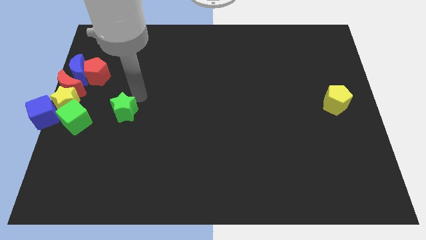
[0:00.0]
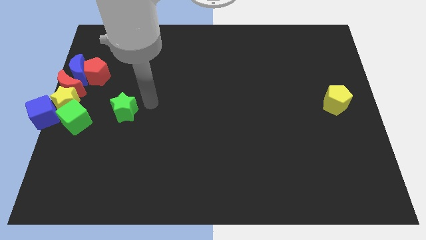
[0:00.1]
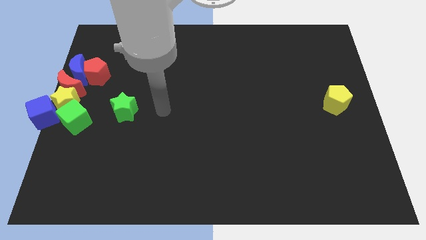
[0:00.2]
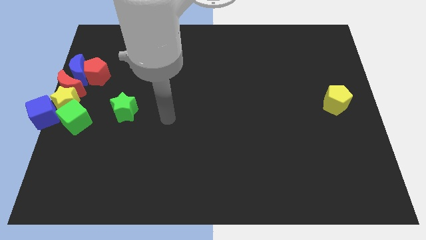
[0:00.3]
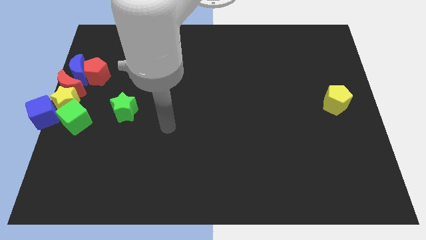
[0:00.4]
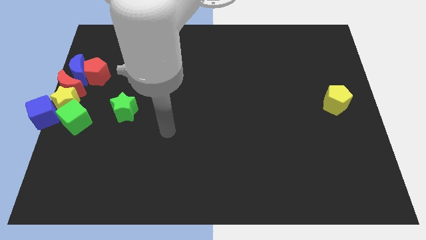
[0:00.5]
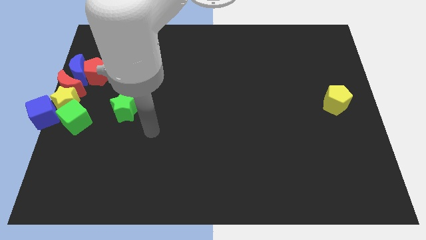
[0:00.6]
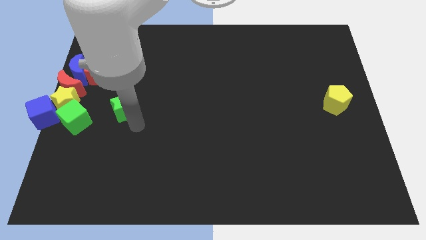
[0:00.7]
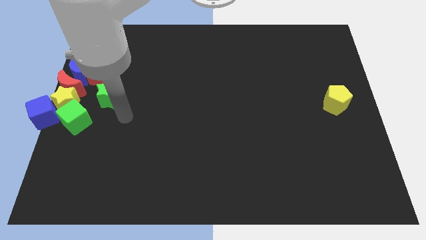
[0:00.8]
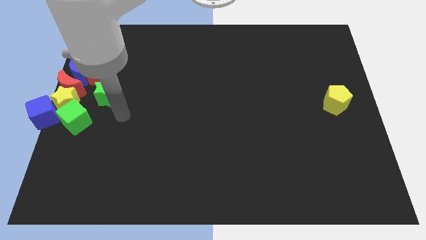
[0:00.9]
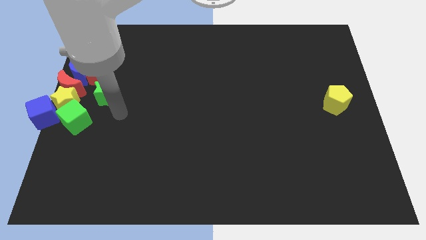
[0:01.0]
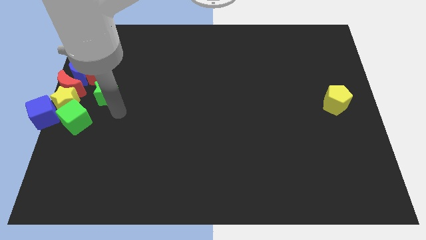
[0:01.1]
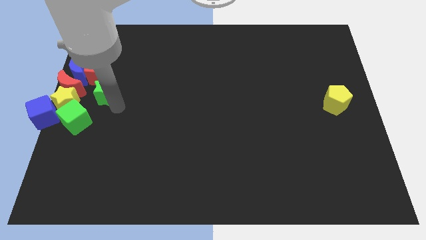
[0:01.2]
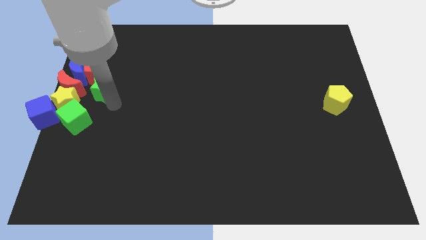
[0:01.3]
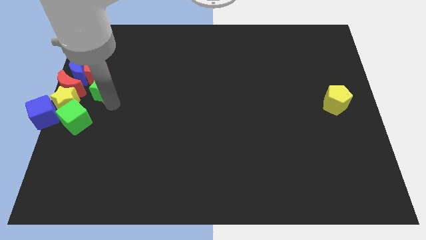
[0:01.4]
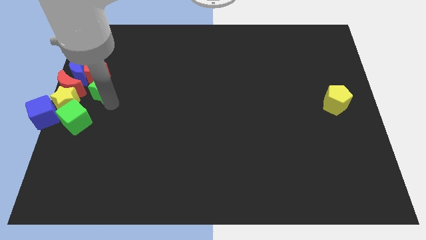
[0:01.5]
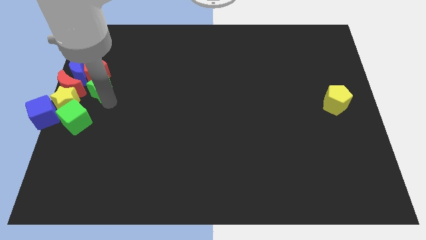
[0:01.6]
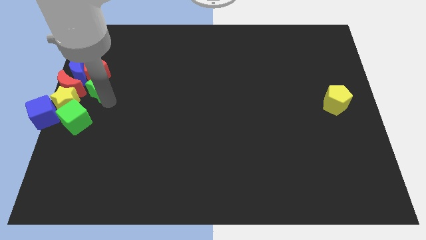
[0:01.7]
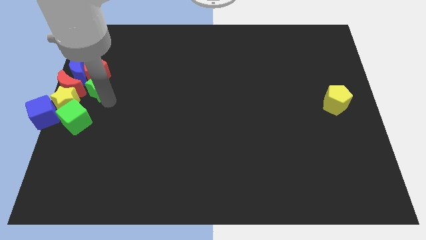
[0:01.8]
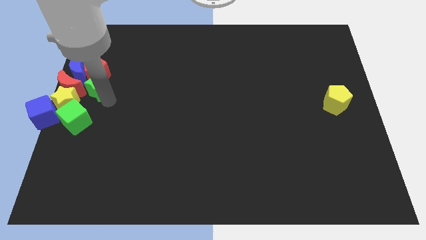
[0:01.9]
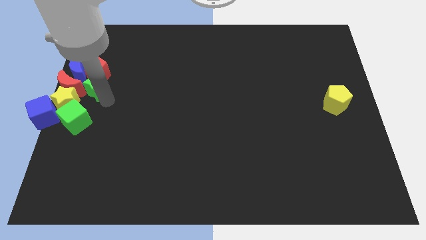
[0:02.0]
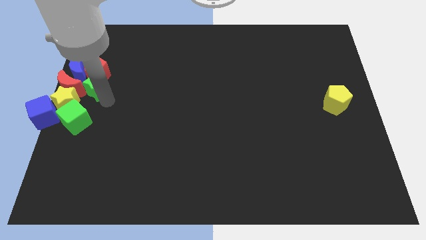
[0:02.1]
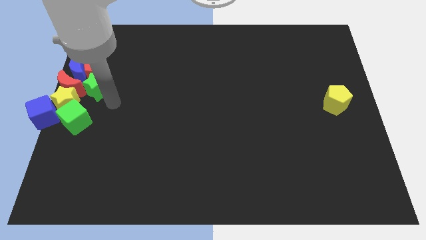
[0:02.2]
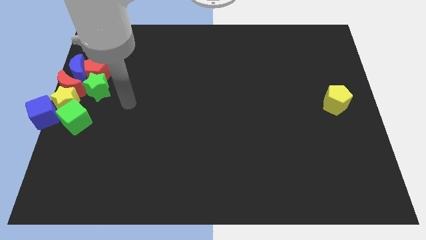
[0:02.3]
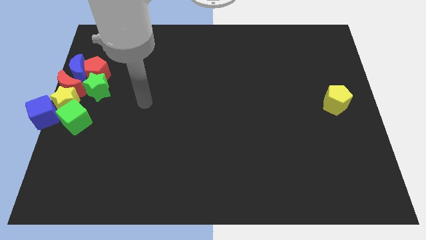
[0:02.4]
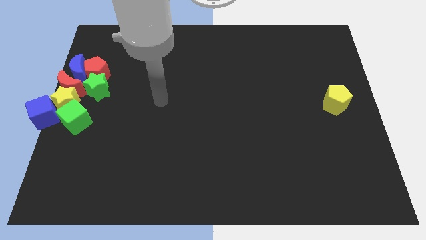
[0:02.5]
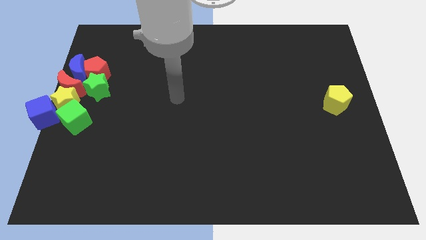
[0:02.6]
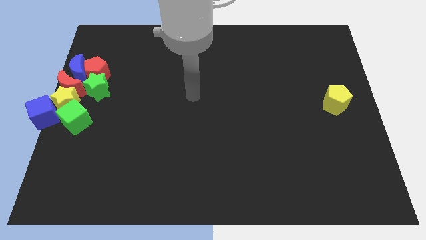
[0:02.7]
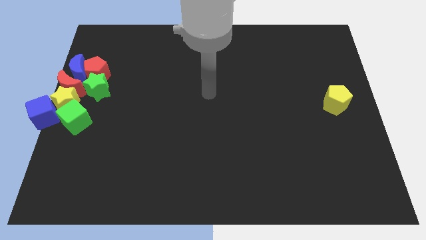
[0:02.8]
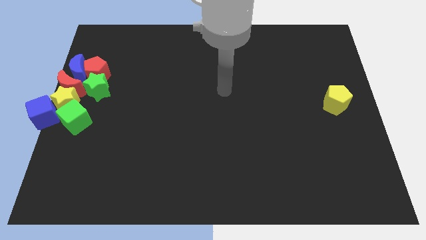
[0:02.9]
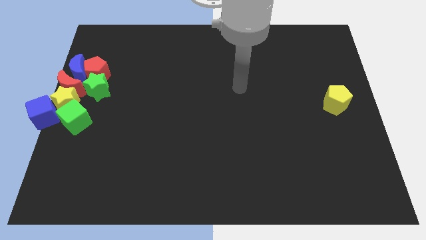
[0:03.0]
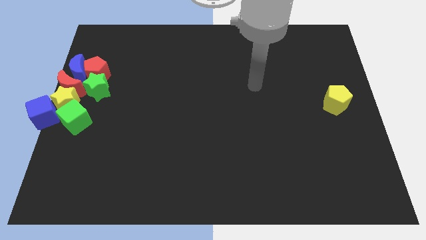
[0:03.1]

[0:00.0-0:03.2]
slide the green star to the bottom side of the red pentagon

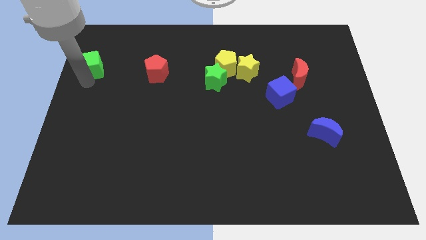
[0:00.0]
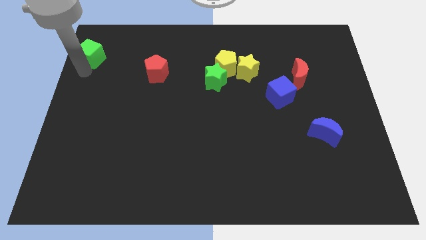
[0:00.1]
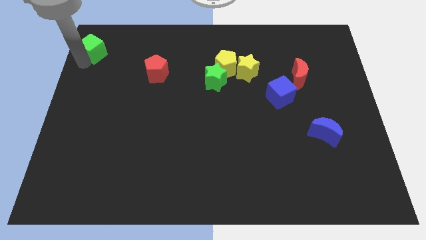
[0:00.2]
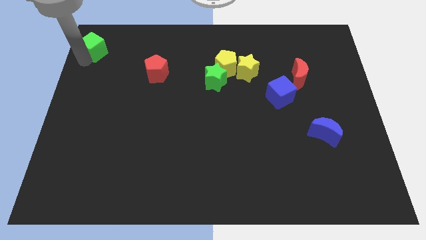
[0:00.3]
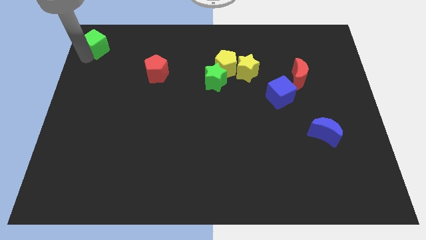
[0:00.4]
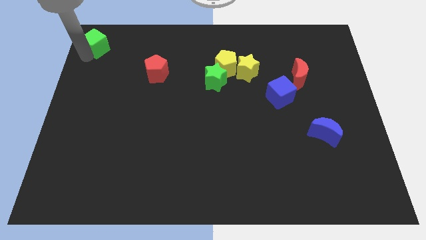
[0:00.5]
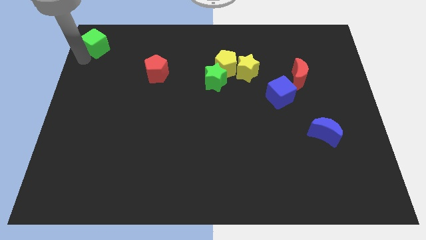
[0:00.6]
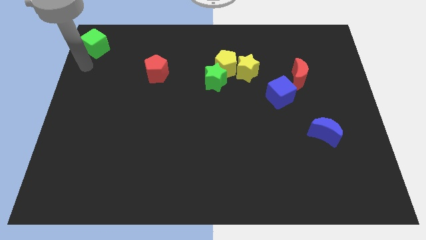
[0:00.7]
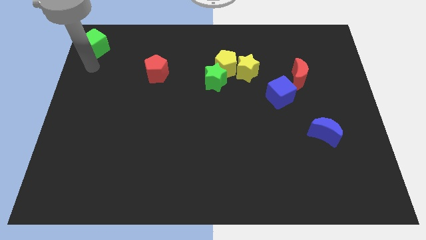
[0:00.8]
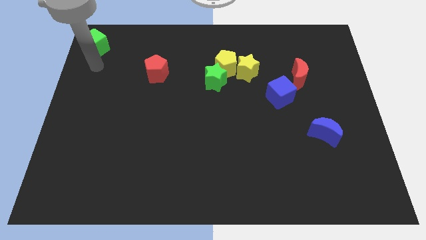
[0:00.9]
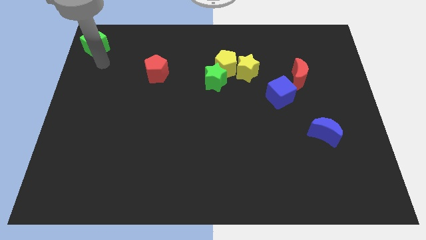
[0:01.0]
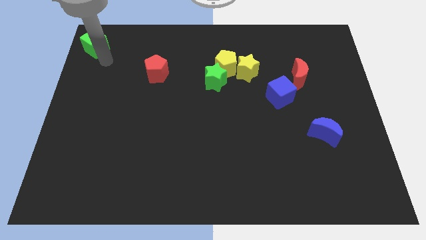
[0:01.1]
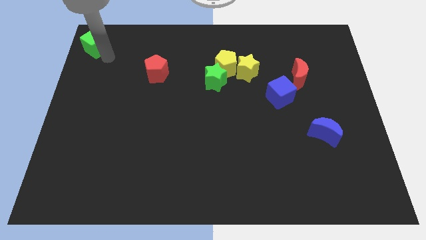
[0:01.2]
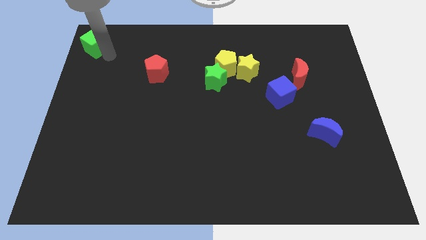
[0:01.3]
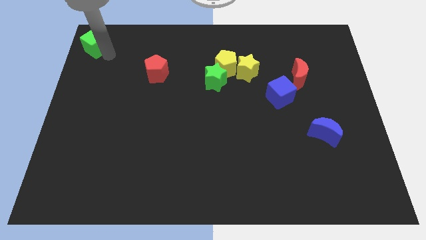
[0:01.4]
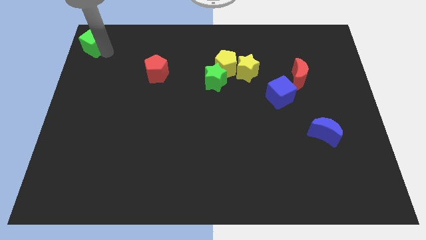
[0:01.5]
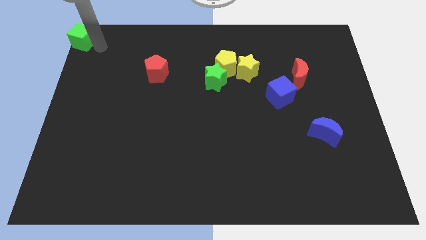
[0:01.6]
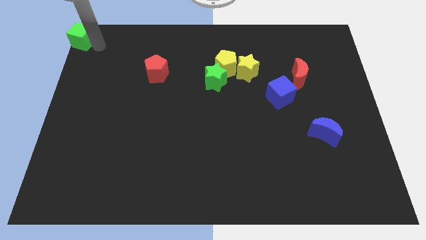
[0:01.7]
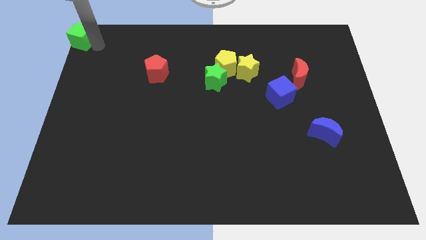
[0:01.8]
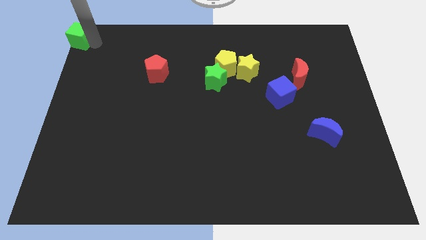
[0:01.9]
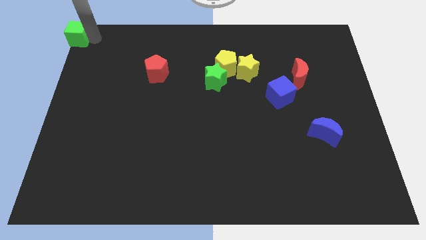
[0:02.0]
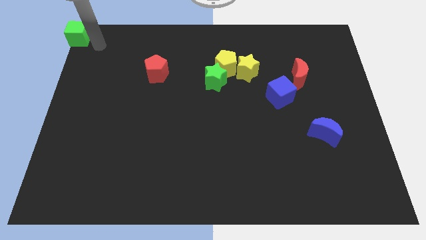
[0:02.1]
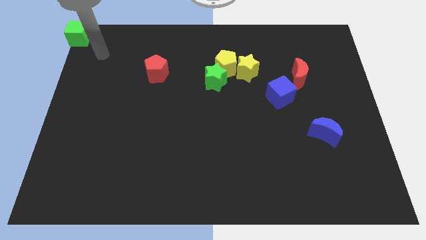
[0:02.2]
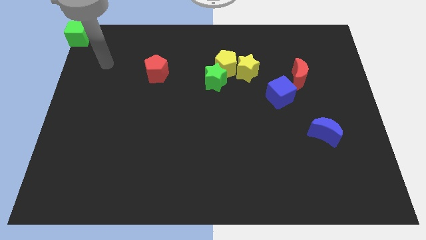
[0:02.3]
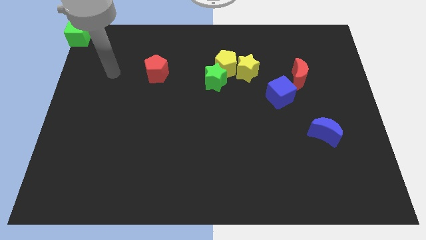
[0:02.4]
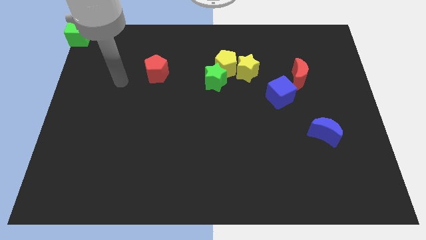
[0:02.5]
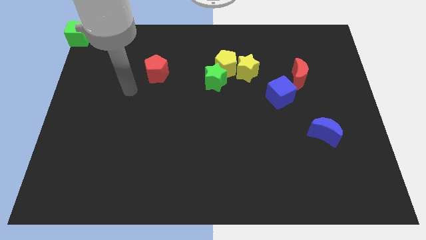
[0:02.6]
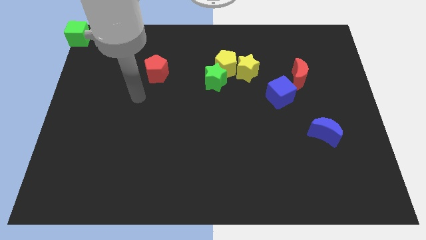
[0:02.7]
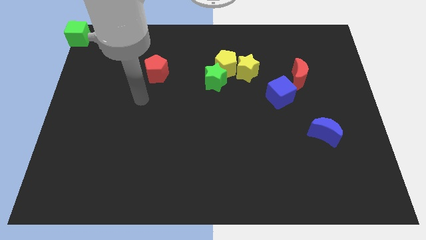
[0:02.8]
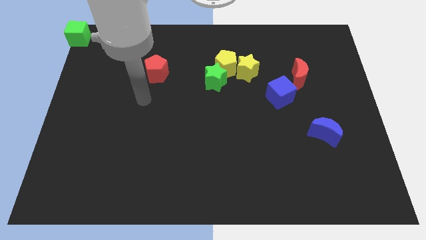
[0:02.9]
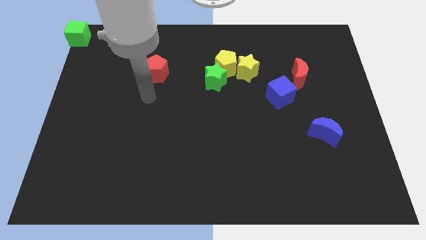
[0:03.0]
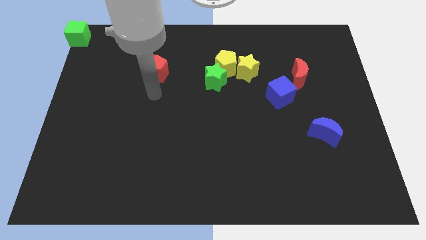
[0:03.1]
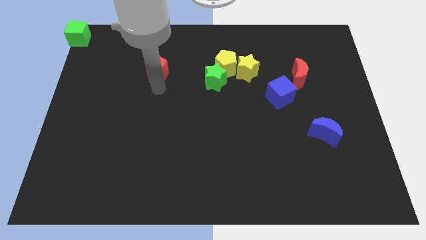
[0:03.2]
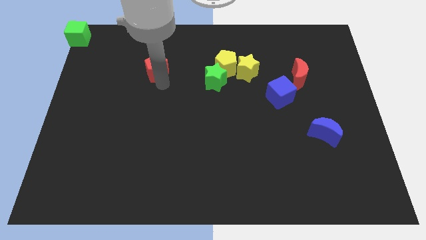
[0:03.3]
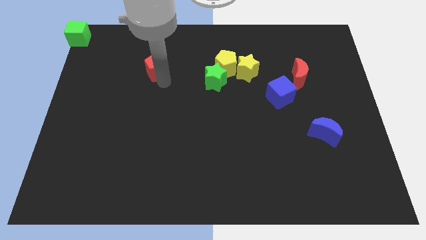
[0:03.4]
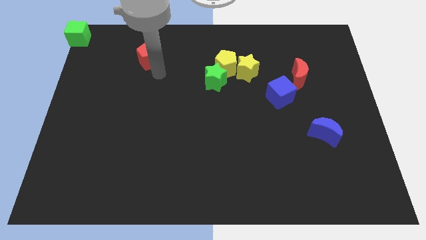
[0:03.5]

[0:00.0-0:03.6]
move your arm to the bottom of the red pentagon

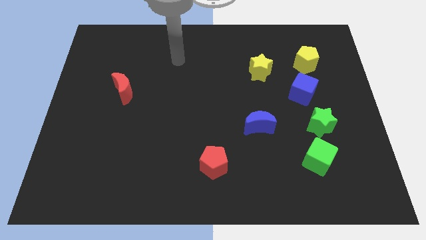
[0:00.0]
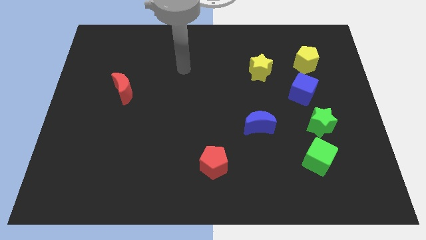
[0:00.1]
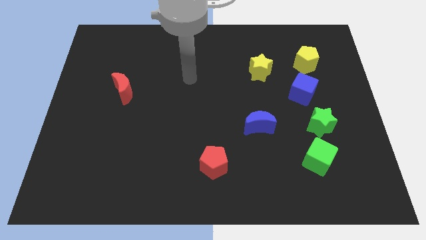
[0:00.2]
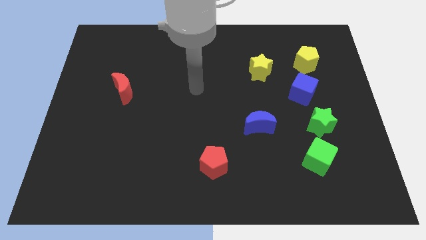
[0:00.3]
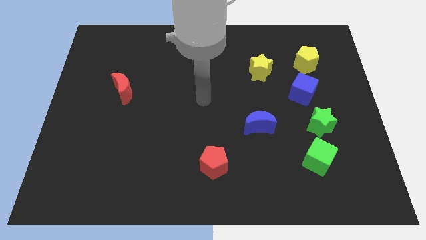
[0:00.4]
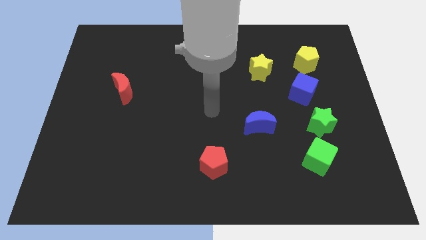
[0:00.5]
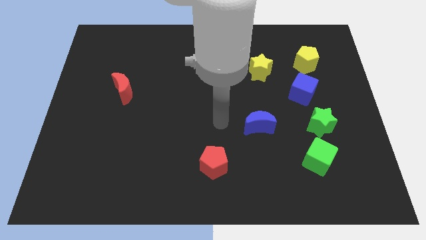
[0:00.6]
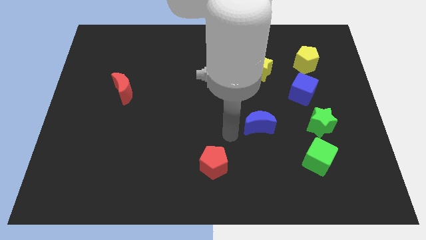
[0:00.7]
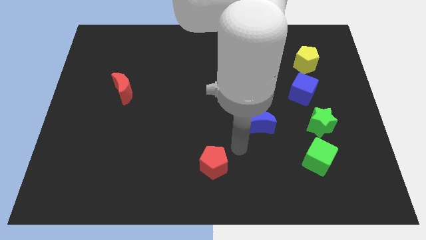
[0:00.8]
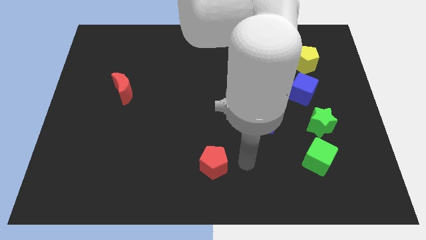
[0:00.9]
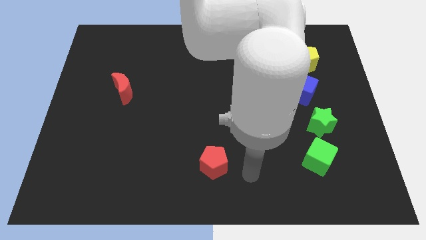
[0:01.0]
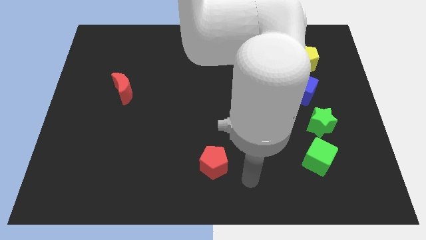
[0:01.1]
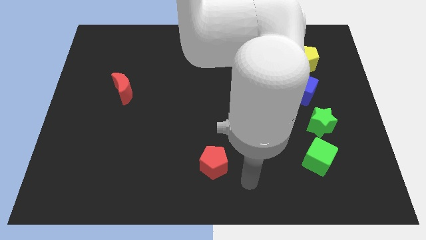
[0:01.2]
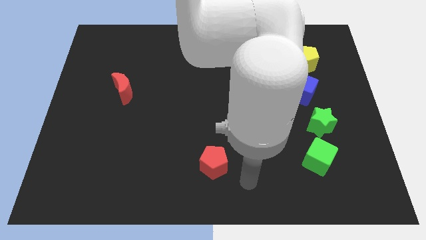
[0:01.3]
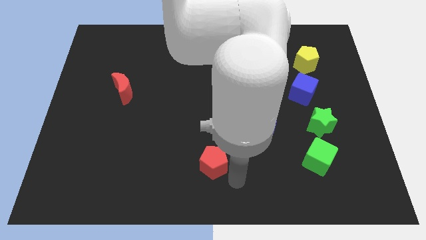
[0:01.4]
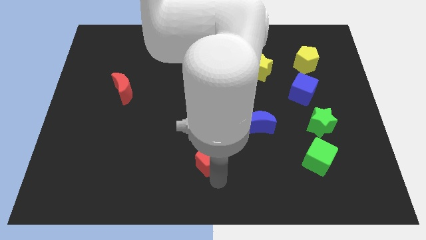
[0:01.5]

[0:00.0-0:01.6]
place your hand below the red pentagon

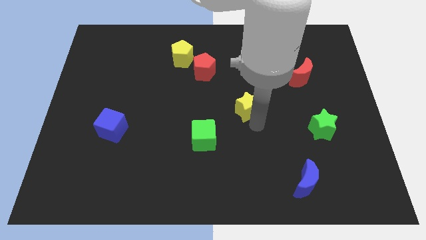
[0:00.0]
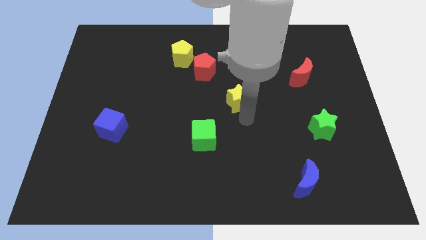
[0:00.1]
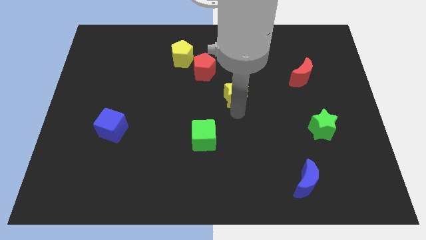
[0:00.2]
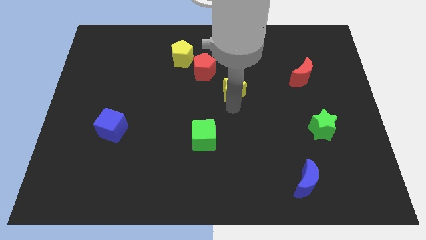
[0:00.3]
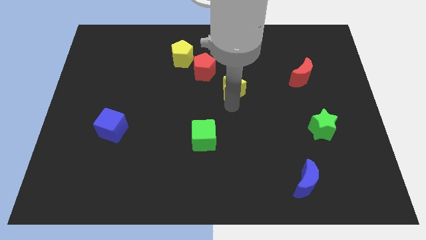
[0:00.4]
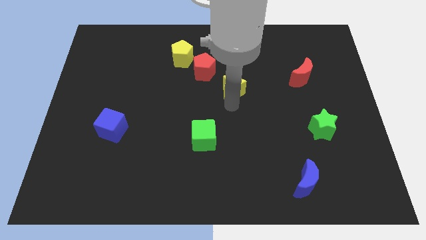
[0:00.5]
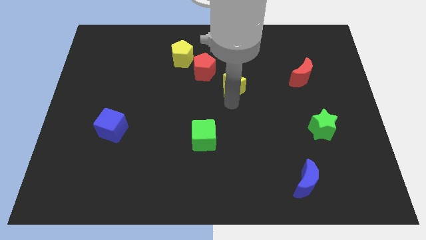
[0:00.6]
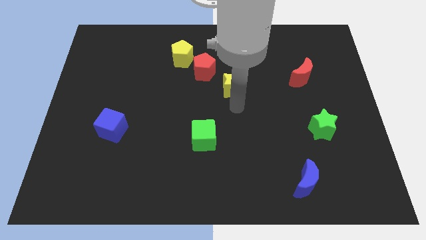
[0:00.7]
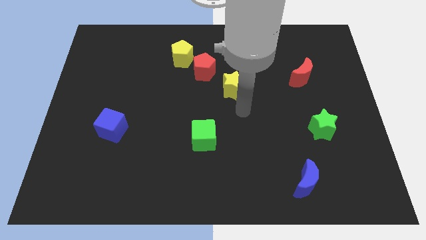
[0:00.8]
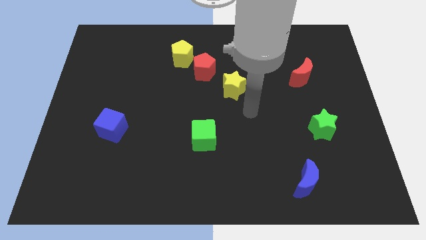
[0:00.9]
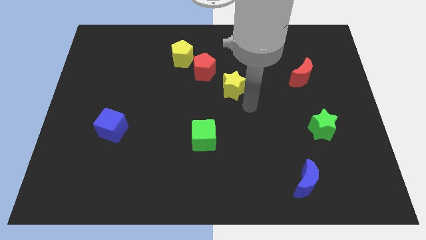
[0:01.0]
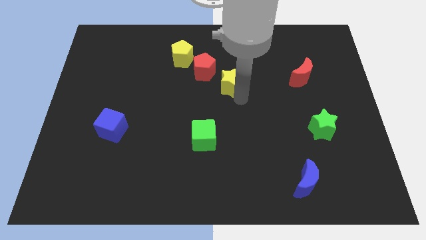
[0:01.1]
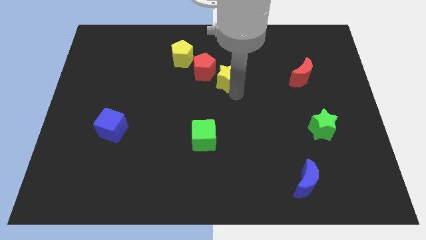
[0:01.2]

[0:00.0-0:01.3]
place the yellow star bottom right of the red pentagon
